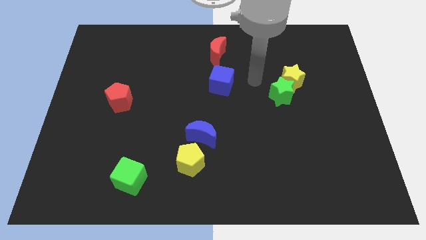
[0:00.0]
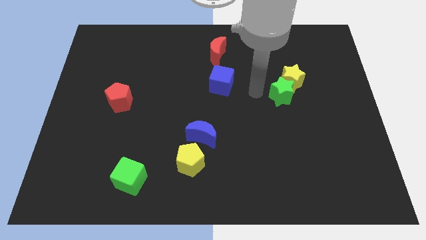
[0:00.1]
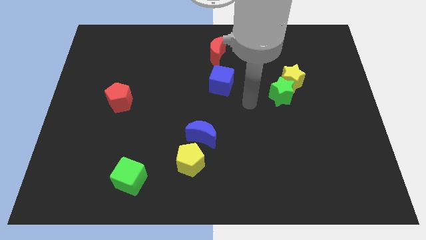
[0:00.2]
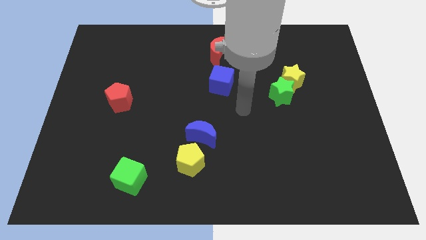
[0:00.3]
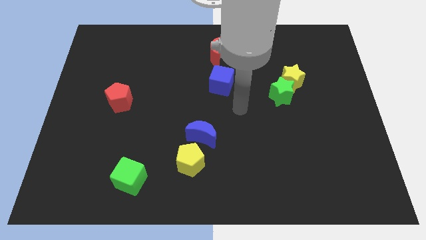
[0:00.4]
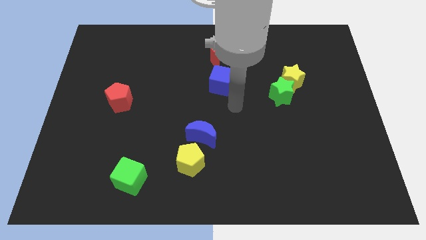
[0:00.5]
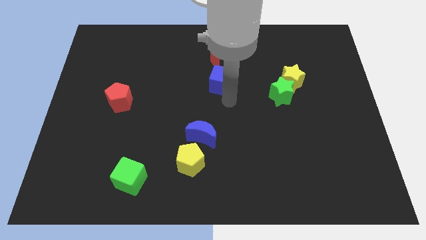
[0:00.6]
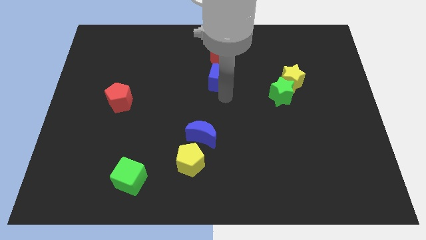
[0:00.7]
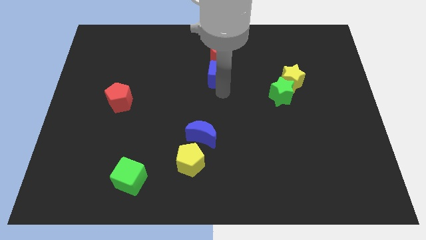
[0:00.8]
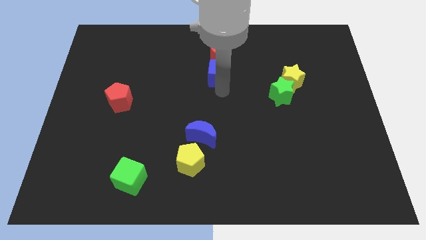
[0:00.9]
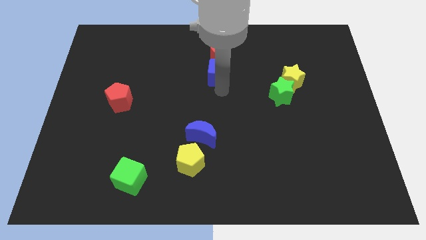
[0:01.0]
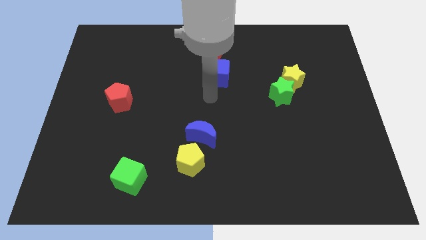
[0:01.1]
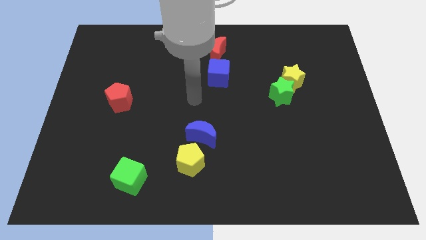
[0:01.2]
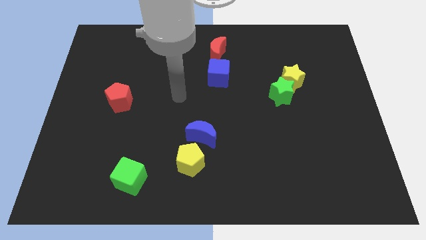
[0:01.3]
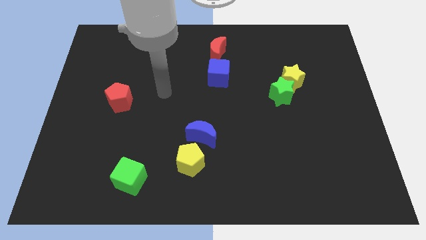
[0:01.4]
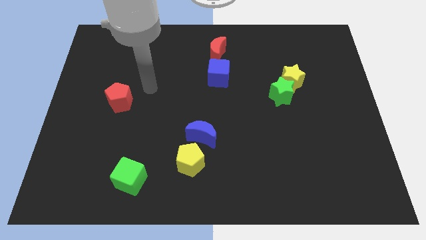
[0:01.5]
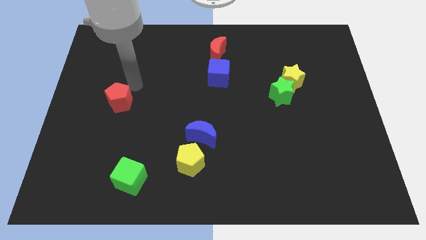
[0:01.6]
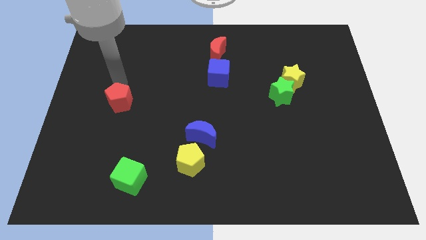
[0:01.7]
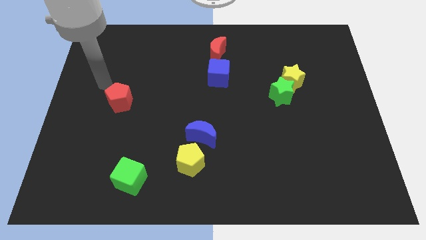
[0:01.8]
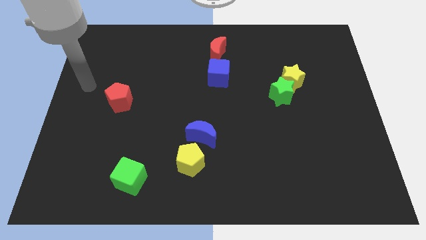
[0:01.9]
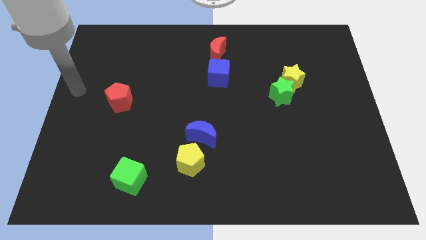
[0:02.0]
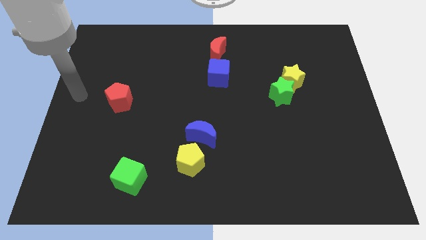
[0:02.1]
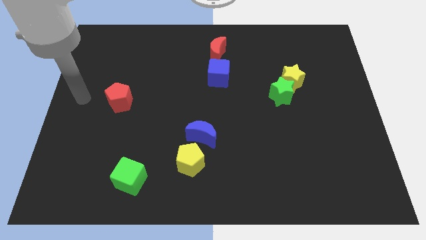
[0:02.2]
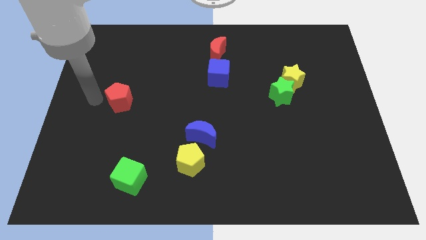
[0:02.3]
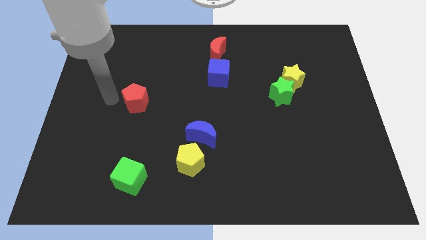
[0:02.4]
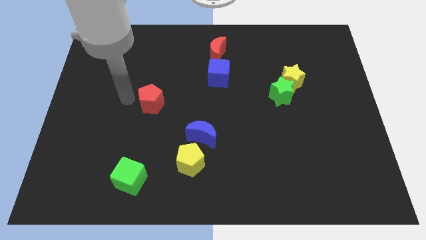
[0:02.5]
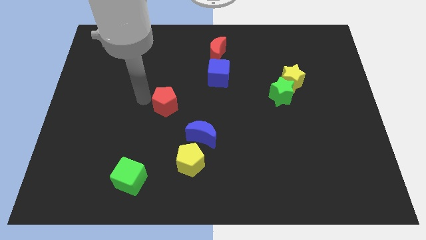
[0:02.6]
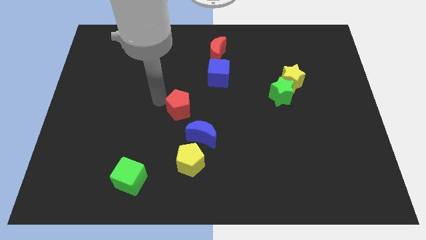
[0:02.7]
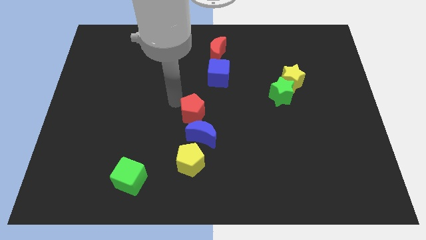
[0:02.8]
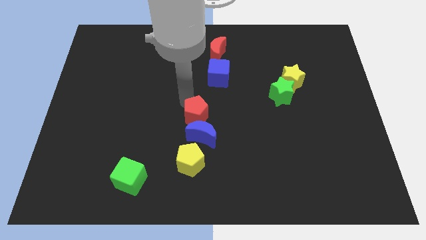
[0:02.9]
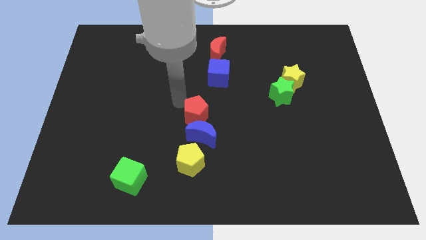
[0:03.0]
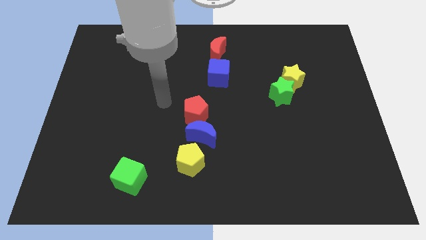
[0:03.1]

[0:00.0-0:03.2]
move the red pentagon close to the blue crescent

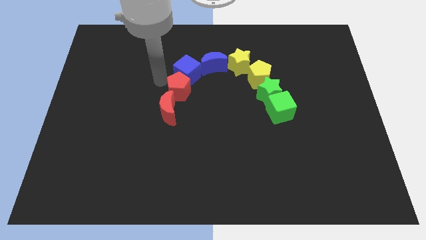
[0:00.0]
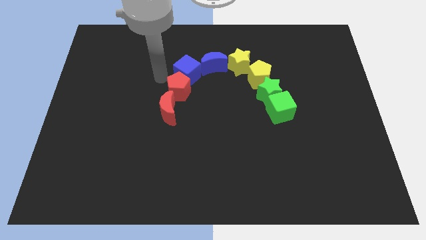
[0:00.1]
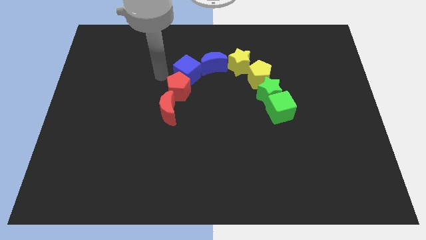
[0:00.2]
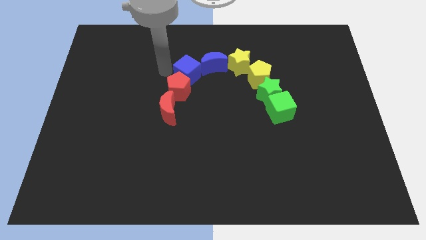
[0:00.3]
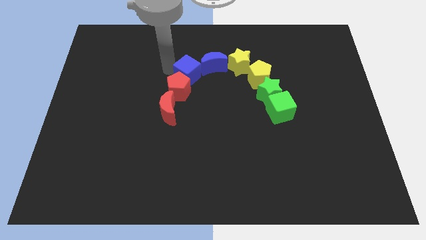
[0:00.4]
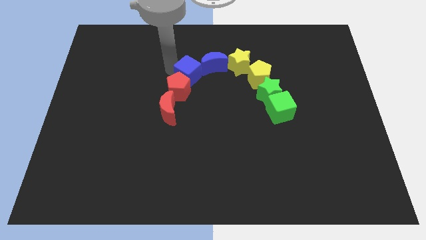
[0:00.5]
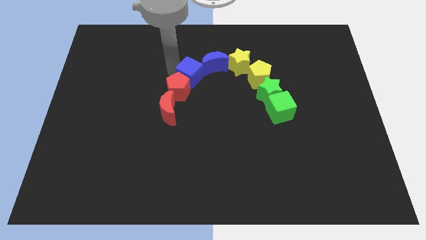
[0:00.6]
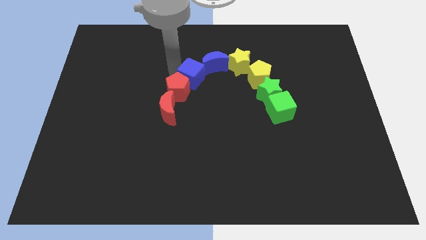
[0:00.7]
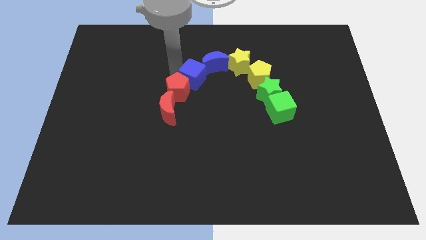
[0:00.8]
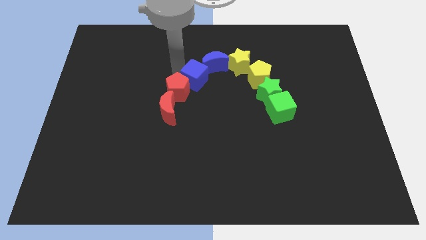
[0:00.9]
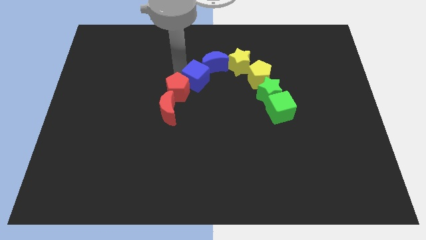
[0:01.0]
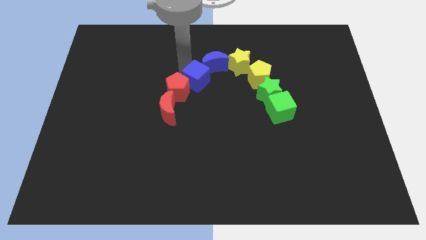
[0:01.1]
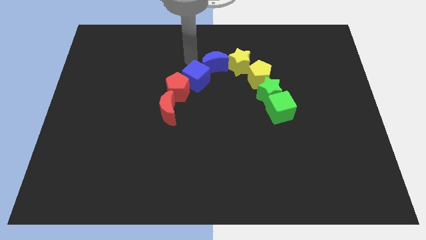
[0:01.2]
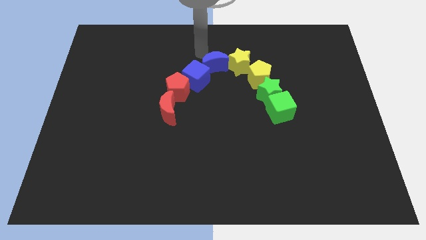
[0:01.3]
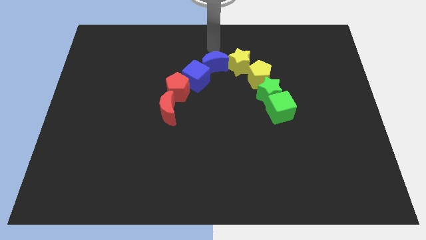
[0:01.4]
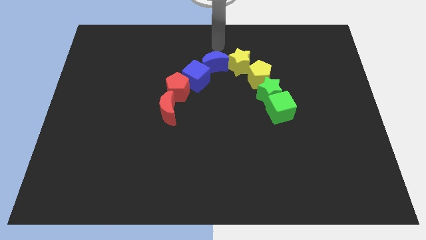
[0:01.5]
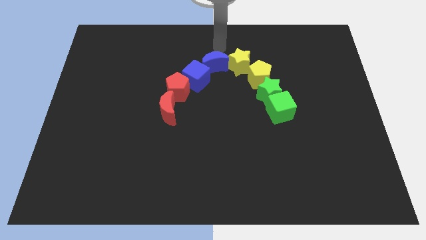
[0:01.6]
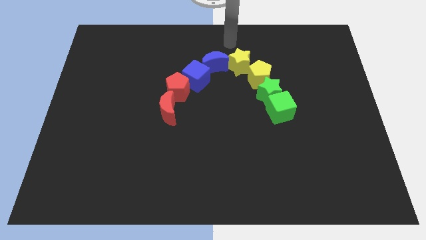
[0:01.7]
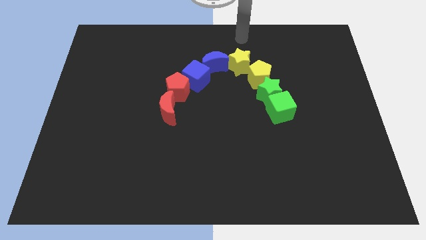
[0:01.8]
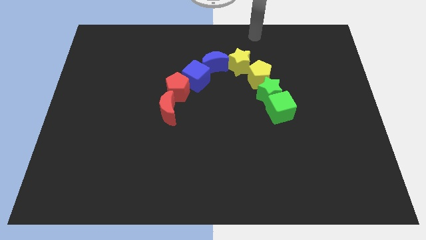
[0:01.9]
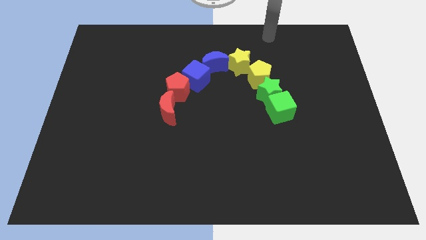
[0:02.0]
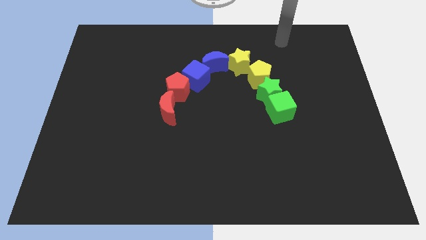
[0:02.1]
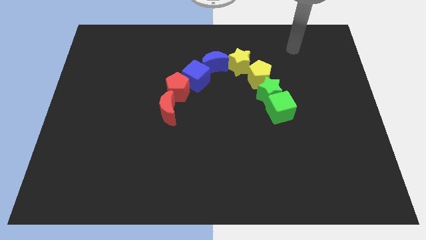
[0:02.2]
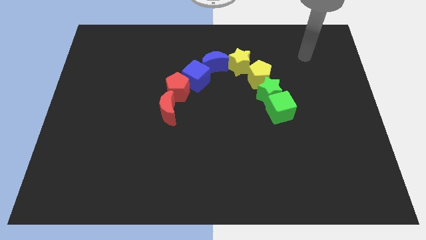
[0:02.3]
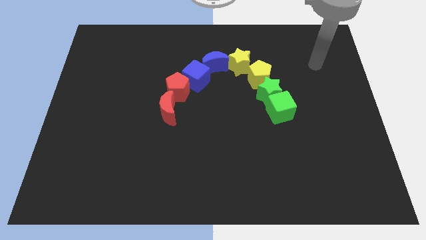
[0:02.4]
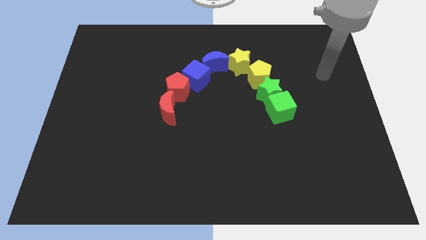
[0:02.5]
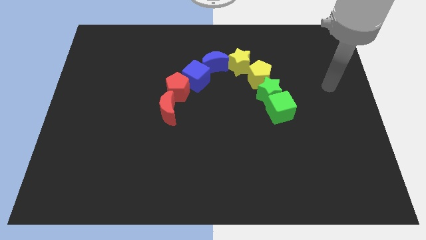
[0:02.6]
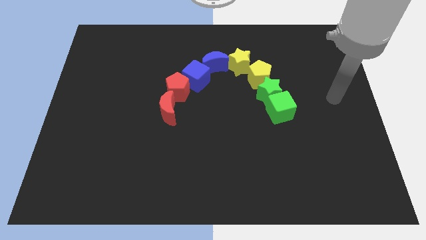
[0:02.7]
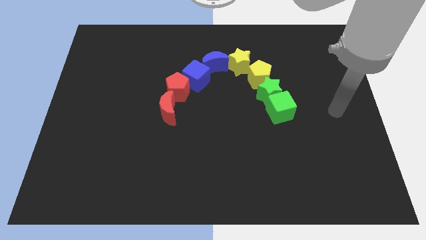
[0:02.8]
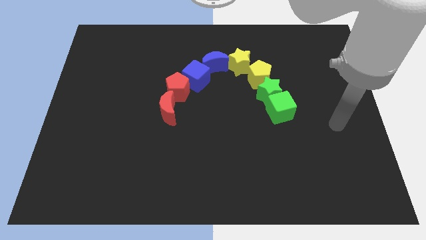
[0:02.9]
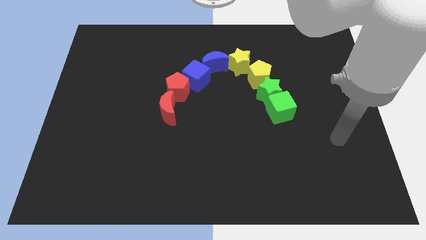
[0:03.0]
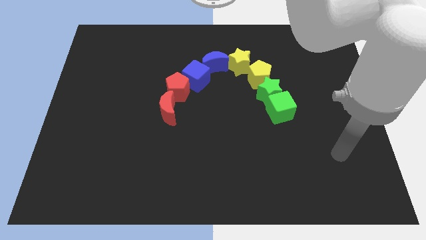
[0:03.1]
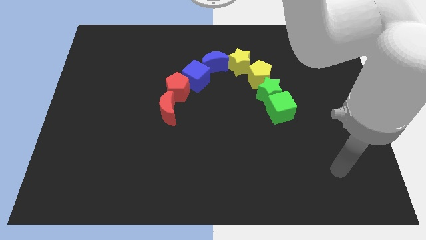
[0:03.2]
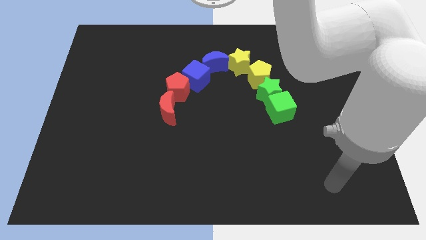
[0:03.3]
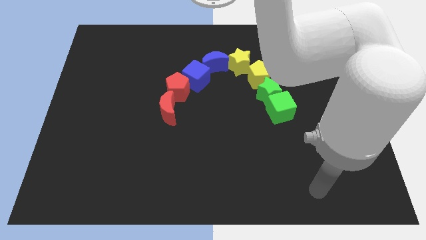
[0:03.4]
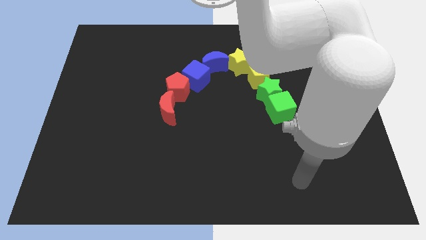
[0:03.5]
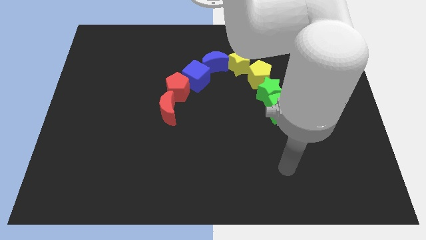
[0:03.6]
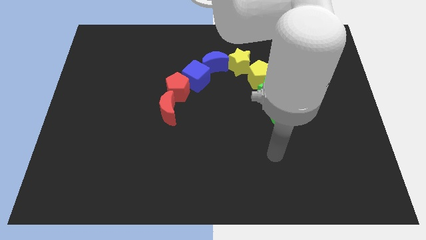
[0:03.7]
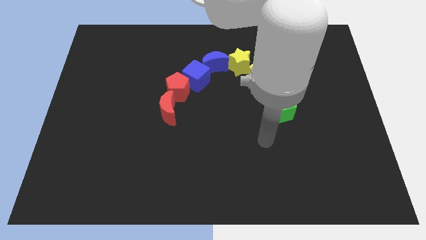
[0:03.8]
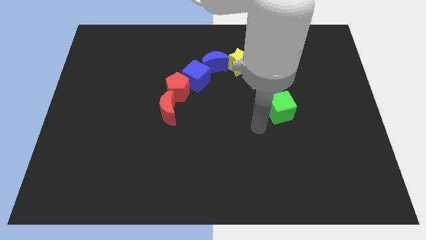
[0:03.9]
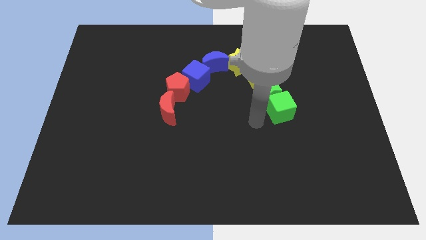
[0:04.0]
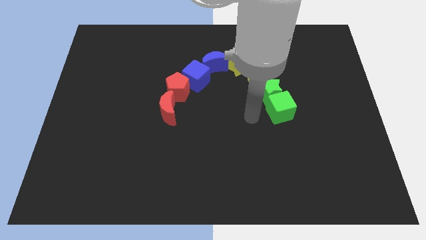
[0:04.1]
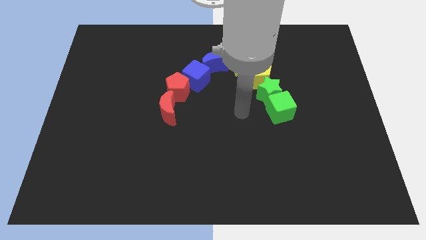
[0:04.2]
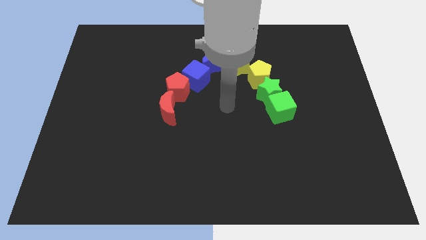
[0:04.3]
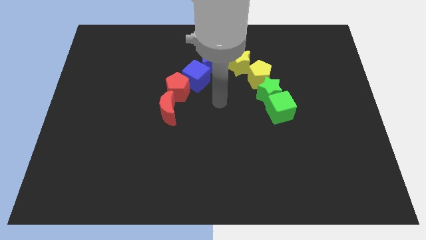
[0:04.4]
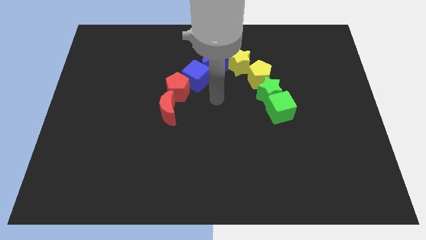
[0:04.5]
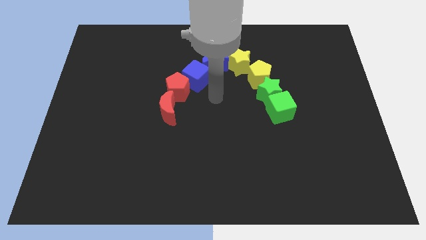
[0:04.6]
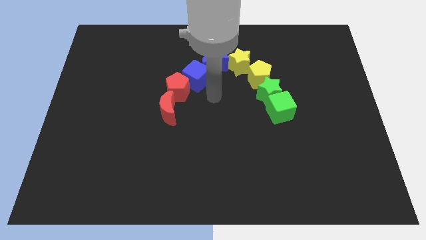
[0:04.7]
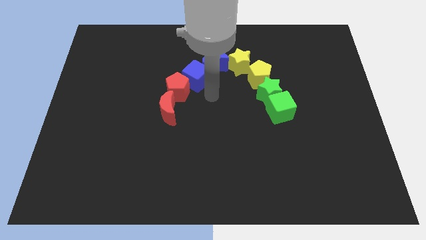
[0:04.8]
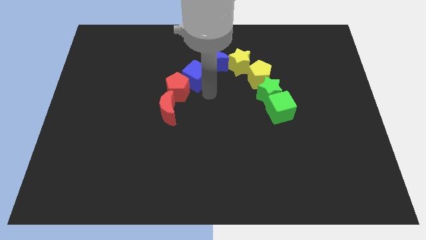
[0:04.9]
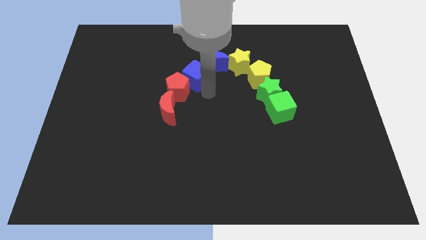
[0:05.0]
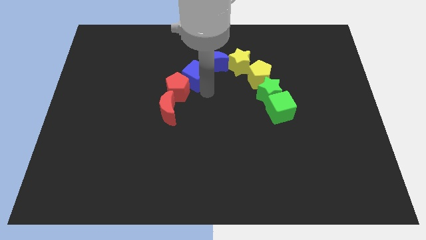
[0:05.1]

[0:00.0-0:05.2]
adjust the blue cube properly

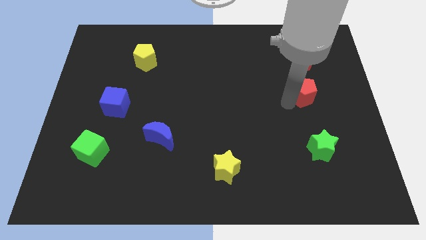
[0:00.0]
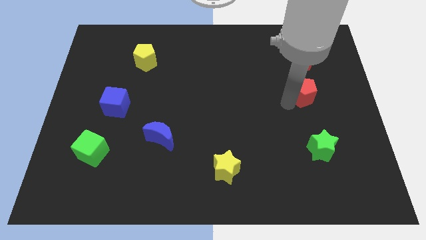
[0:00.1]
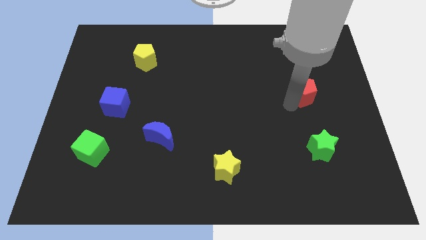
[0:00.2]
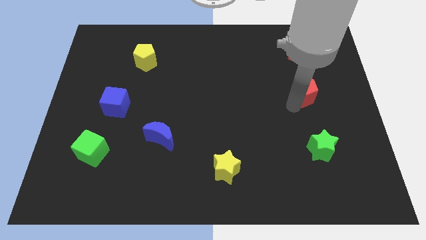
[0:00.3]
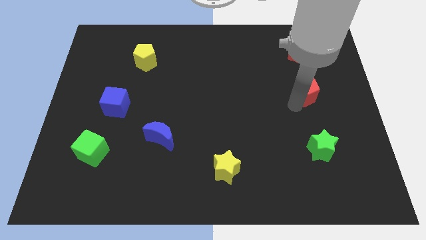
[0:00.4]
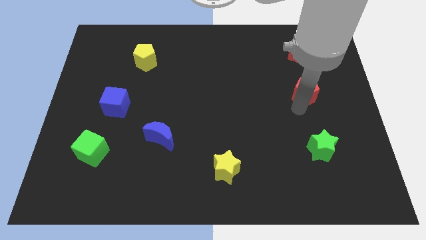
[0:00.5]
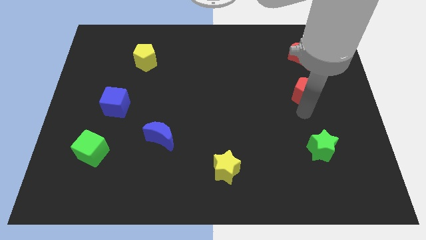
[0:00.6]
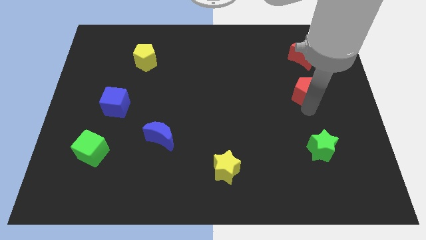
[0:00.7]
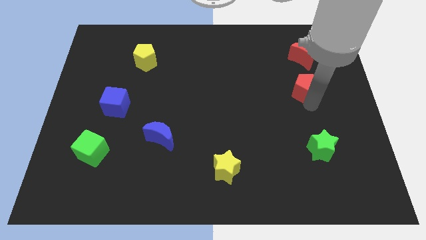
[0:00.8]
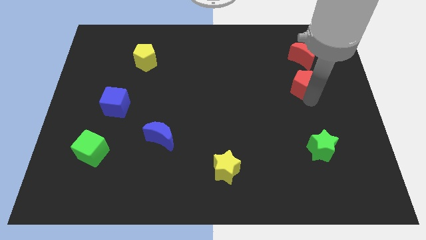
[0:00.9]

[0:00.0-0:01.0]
place red pentagon below red moon
